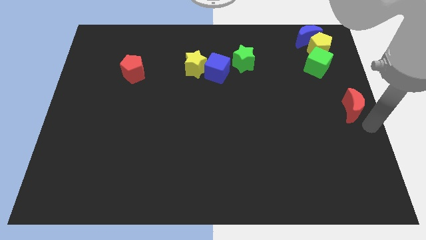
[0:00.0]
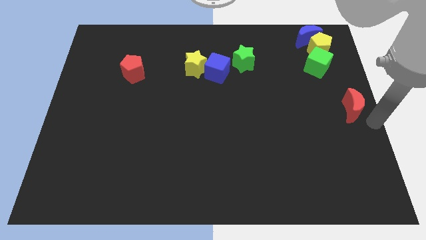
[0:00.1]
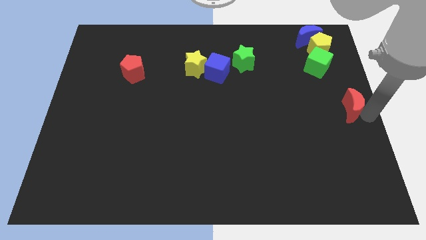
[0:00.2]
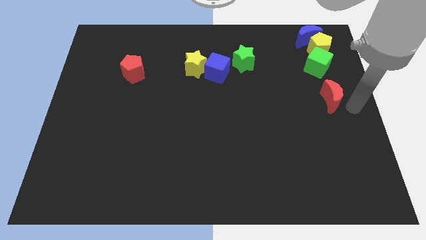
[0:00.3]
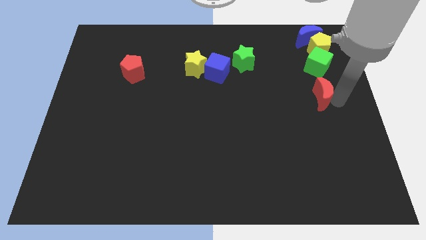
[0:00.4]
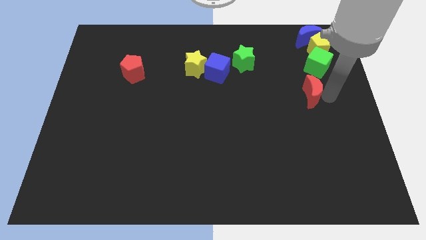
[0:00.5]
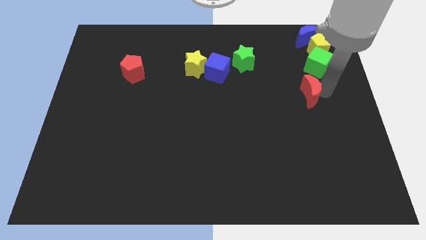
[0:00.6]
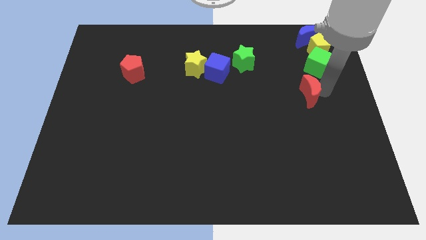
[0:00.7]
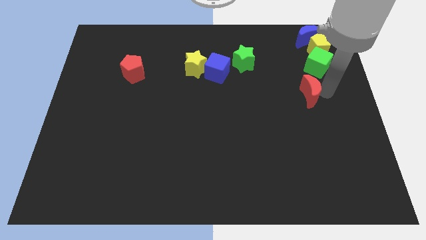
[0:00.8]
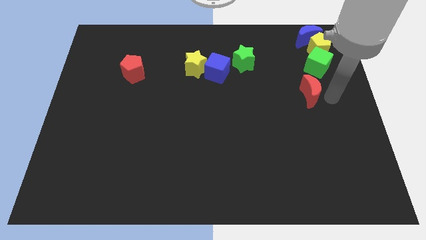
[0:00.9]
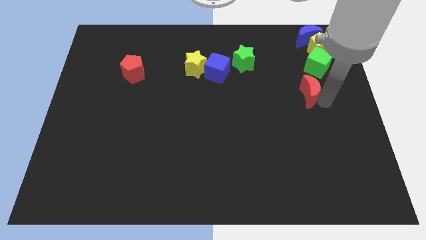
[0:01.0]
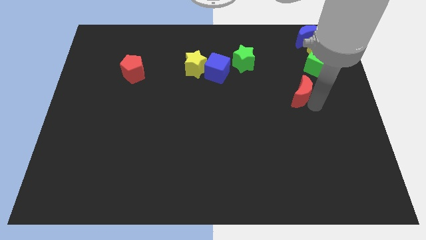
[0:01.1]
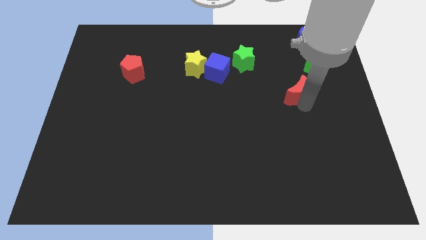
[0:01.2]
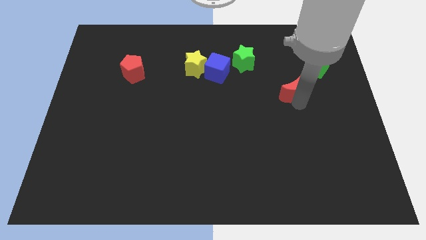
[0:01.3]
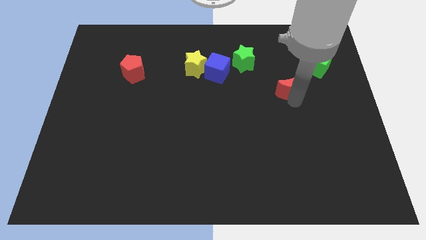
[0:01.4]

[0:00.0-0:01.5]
move red crescent to the bottom left side of the green cube

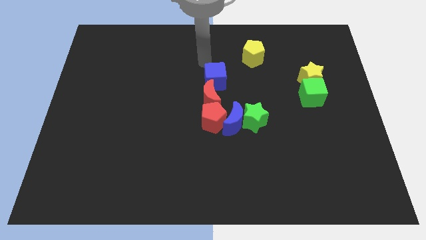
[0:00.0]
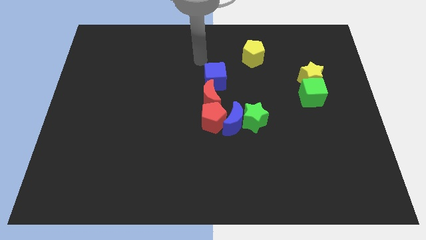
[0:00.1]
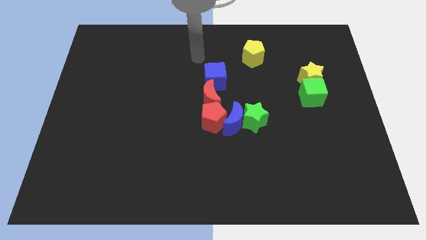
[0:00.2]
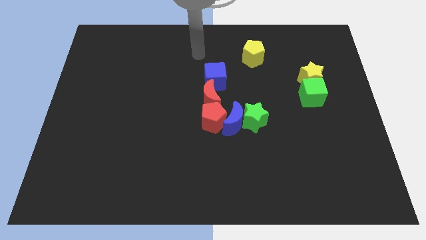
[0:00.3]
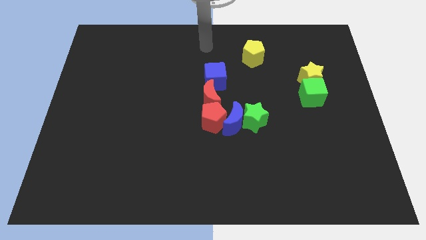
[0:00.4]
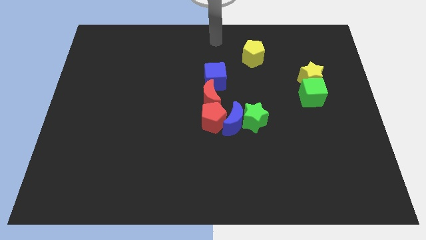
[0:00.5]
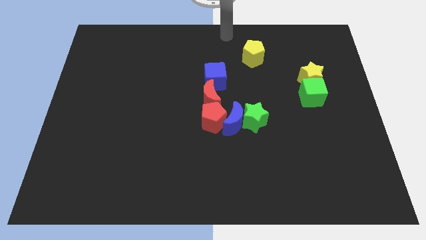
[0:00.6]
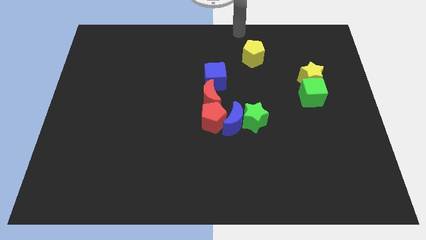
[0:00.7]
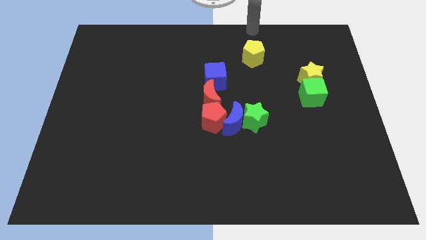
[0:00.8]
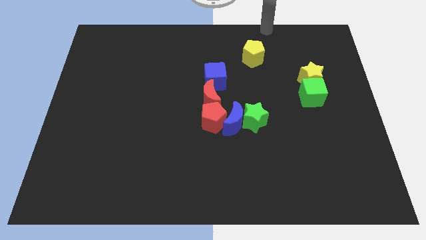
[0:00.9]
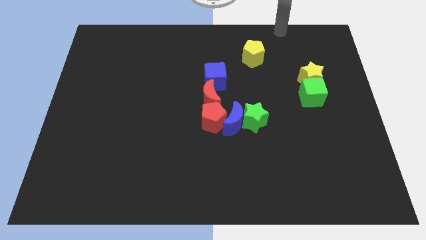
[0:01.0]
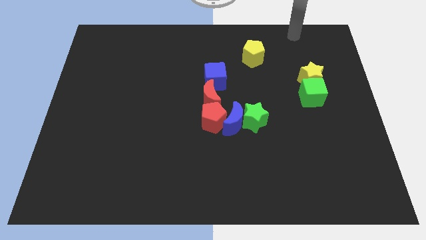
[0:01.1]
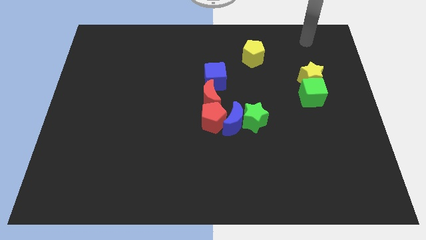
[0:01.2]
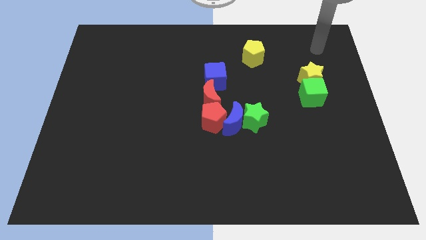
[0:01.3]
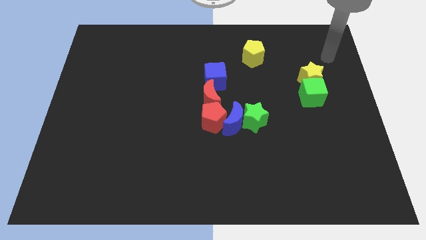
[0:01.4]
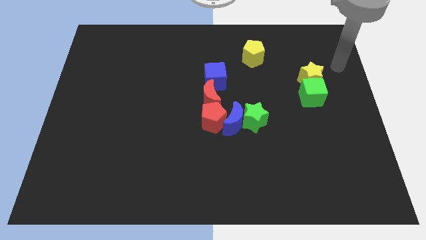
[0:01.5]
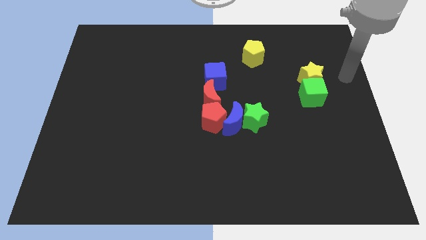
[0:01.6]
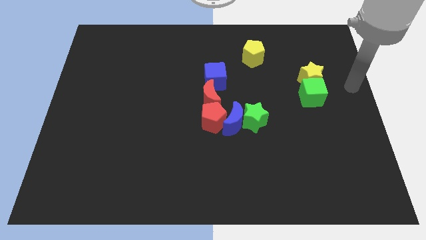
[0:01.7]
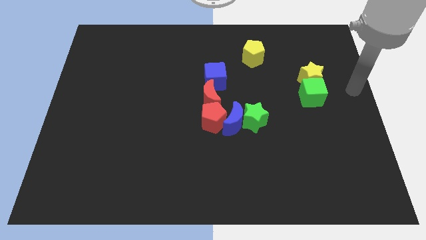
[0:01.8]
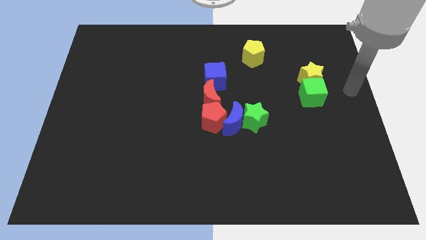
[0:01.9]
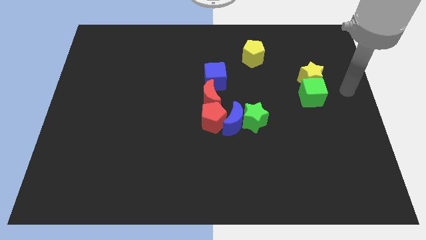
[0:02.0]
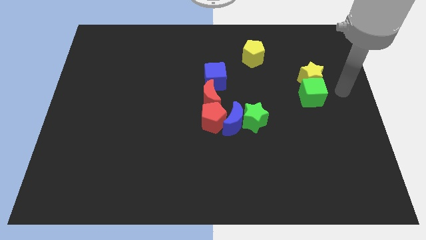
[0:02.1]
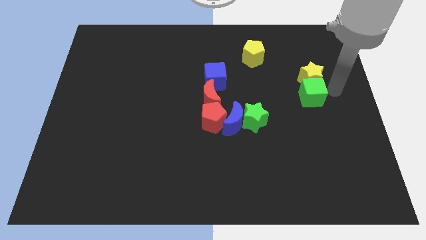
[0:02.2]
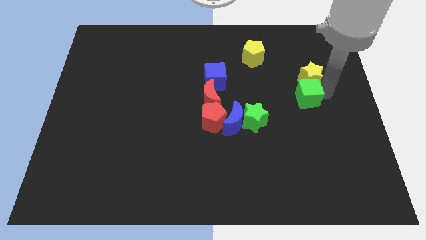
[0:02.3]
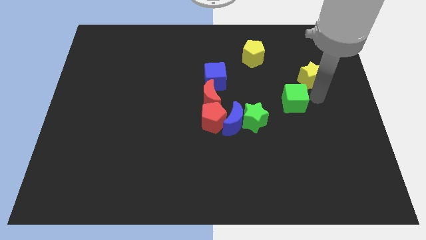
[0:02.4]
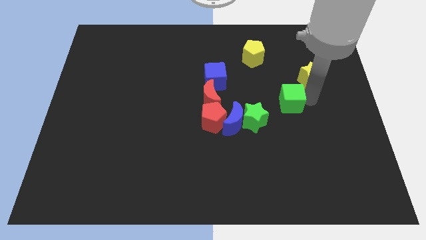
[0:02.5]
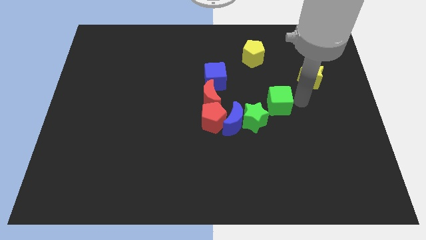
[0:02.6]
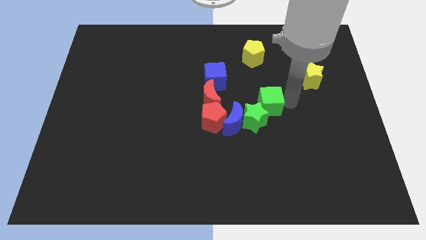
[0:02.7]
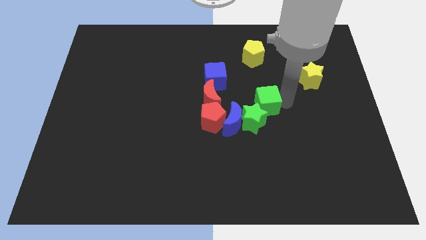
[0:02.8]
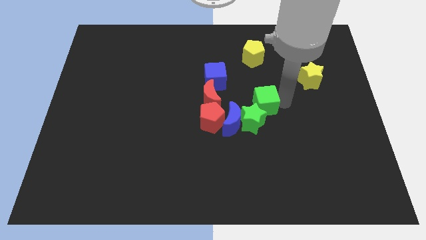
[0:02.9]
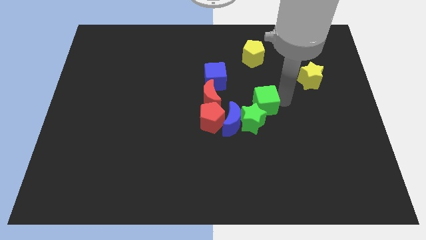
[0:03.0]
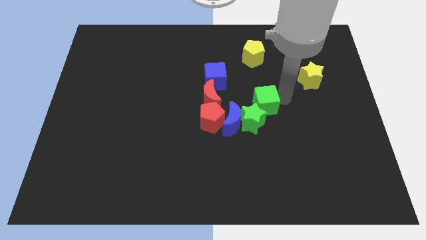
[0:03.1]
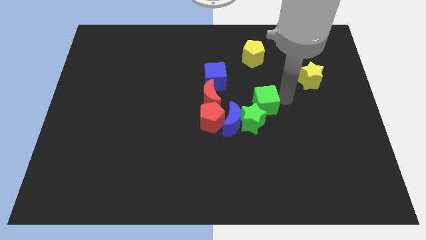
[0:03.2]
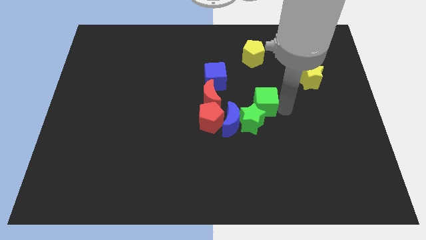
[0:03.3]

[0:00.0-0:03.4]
push the green cube into the green star

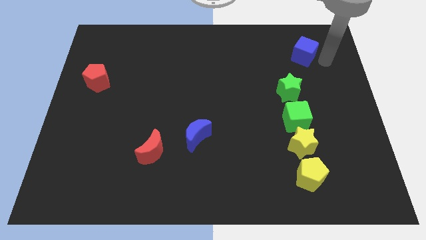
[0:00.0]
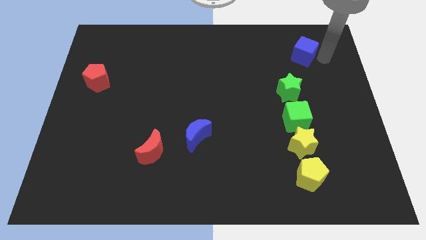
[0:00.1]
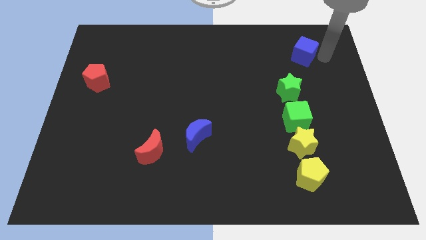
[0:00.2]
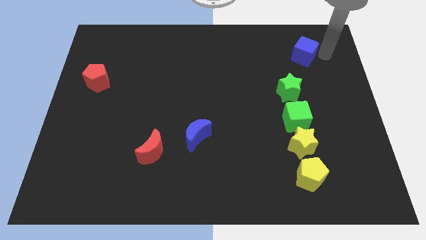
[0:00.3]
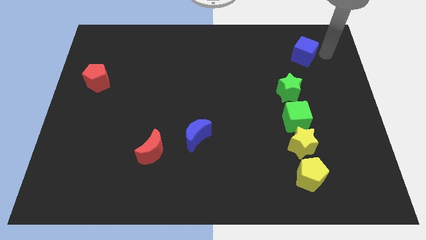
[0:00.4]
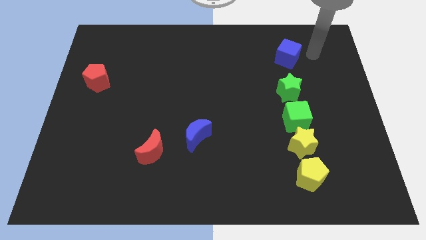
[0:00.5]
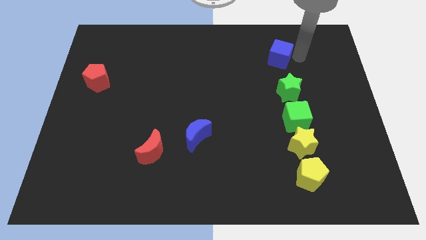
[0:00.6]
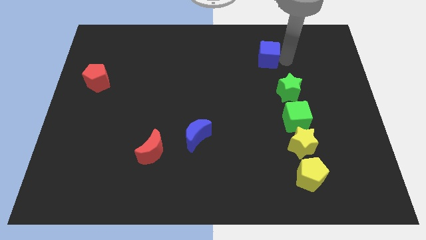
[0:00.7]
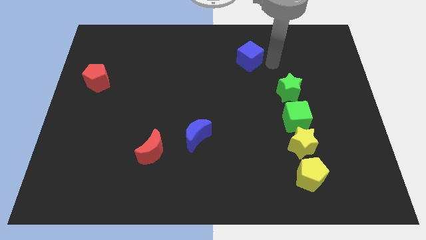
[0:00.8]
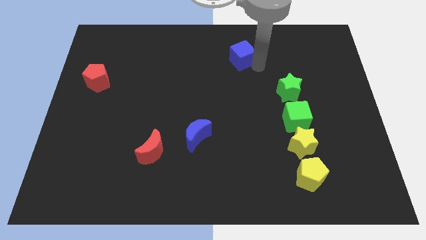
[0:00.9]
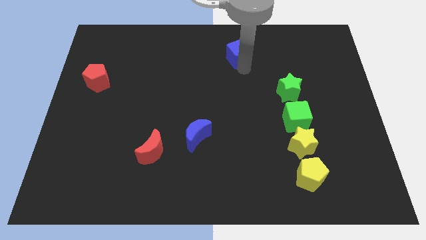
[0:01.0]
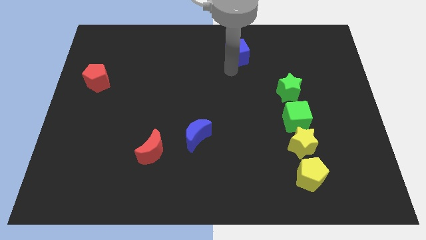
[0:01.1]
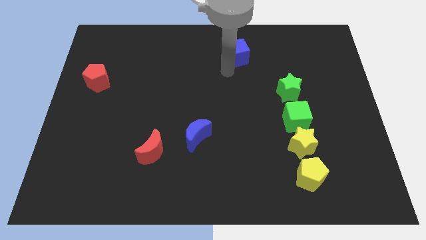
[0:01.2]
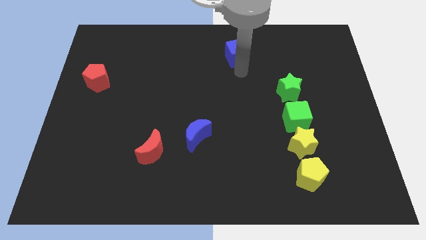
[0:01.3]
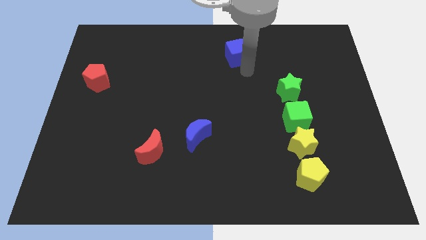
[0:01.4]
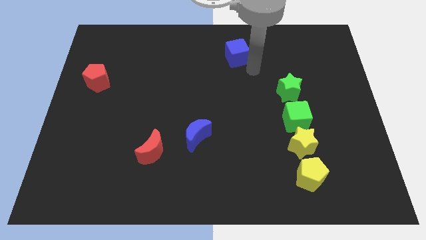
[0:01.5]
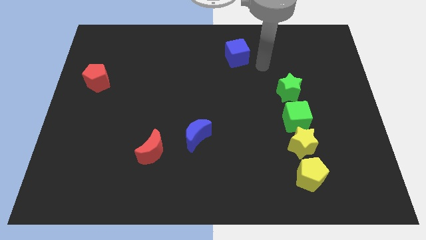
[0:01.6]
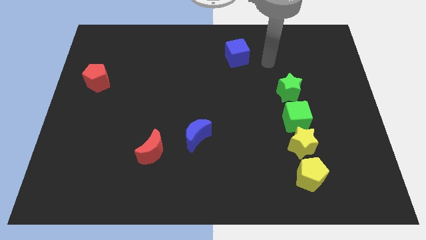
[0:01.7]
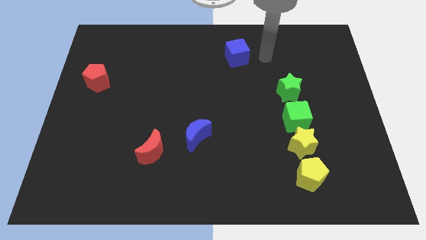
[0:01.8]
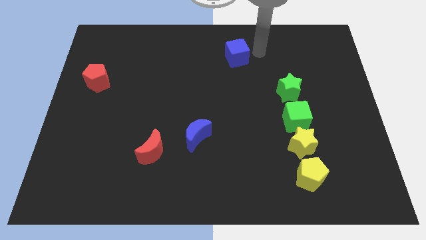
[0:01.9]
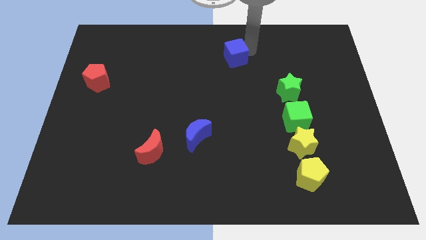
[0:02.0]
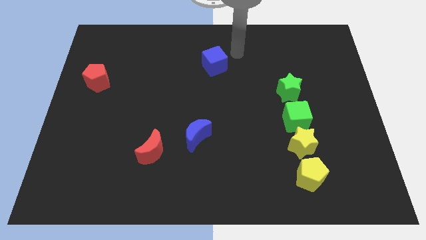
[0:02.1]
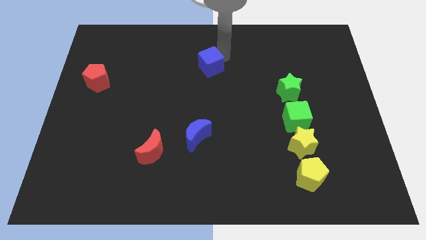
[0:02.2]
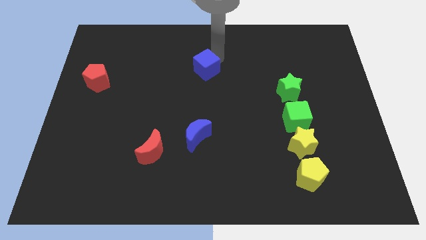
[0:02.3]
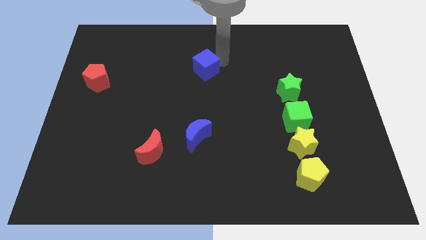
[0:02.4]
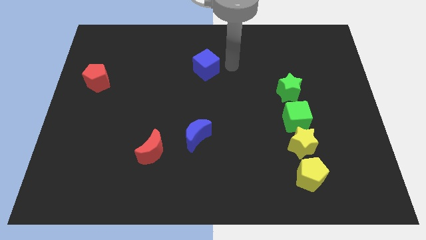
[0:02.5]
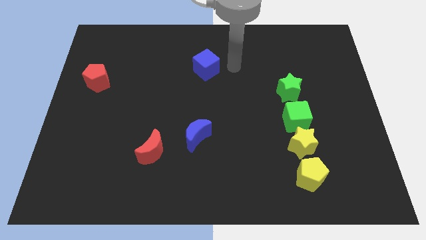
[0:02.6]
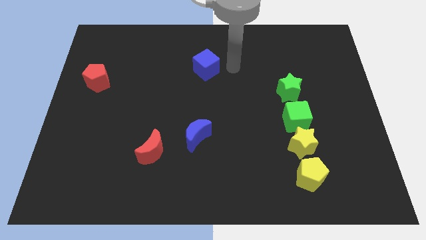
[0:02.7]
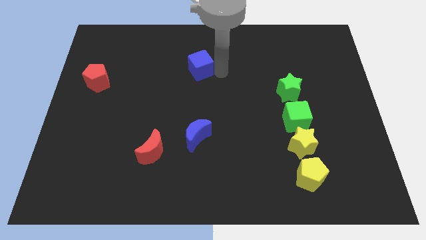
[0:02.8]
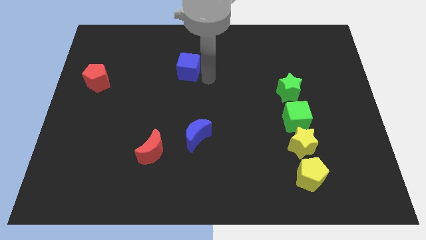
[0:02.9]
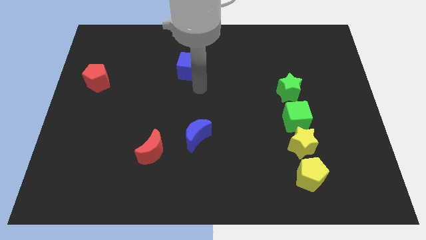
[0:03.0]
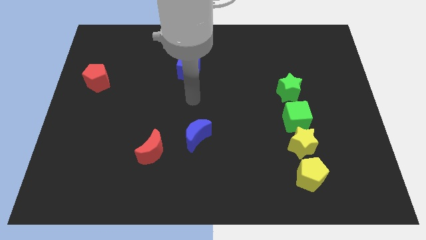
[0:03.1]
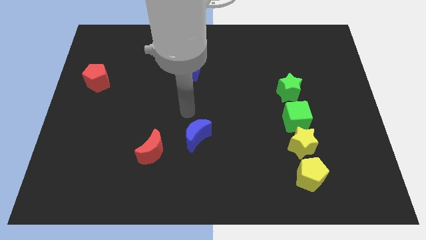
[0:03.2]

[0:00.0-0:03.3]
push the blue cube towards the red pentagon

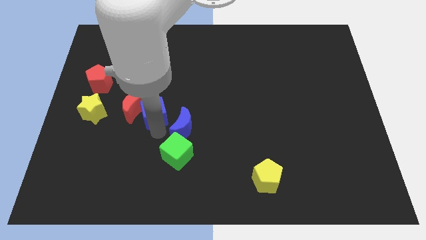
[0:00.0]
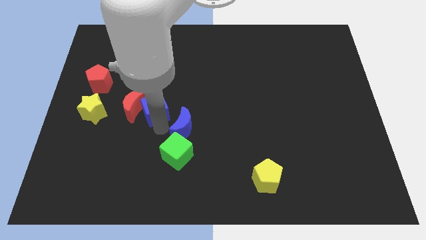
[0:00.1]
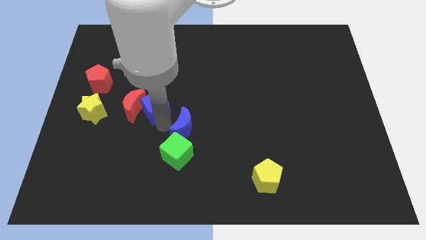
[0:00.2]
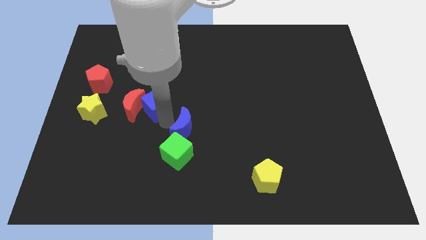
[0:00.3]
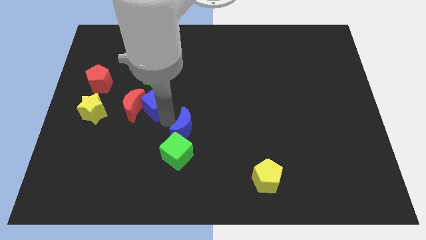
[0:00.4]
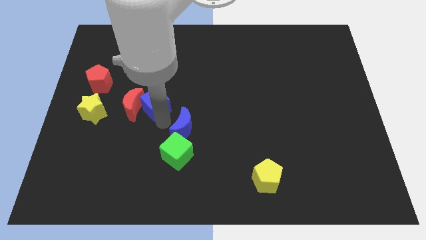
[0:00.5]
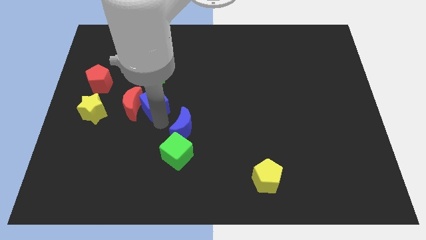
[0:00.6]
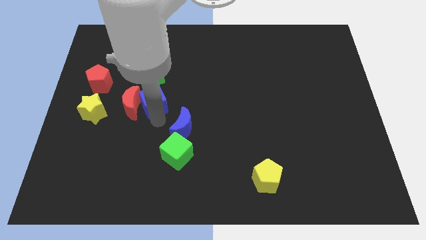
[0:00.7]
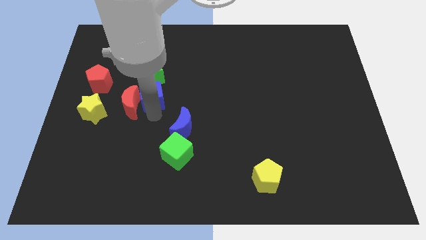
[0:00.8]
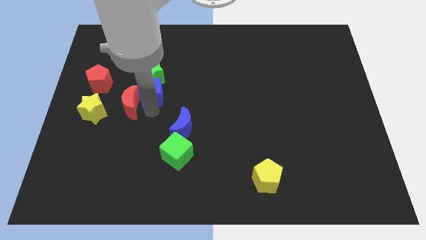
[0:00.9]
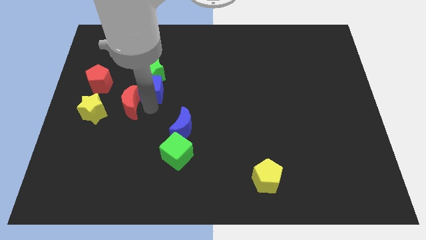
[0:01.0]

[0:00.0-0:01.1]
push the blue cube below the green star
